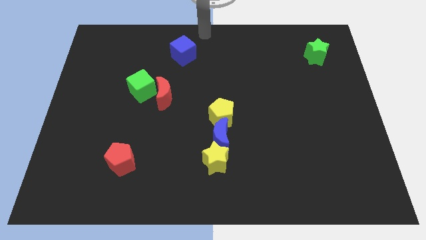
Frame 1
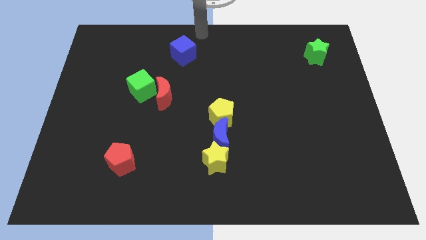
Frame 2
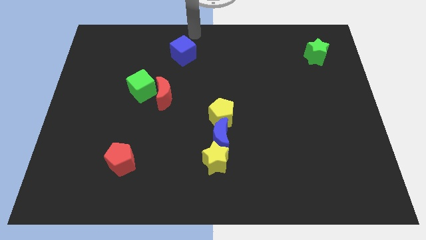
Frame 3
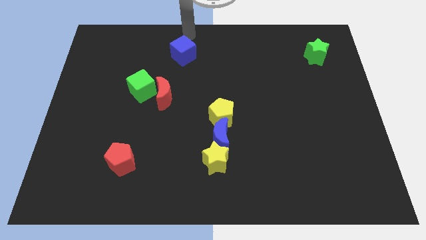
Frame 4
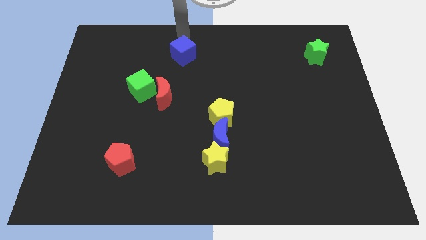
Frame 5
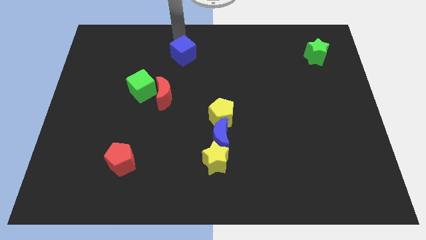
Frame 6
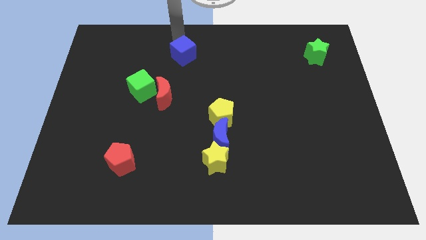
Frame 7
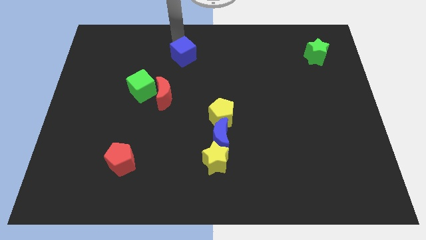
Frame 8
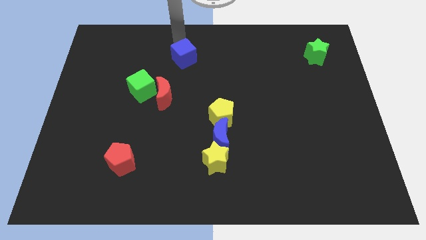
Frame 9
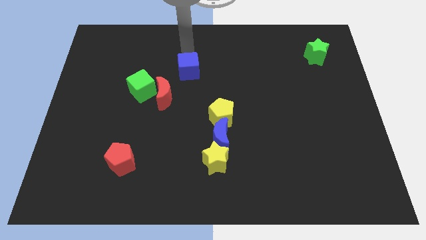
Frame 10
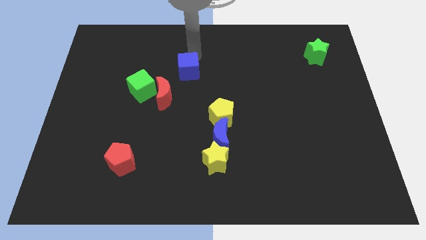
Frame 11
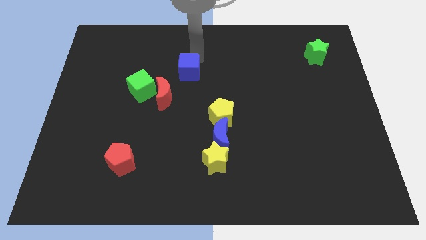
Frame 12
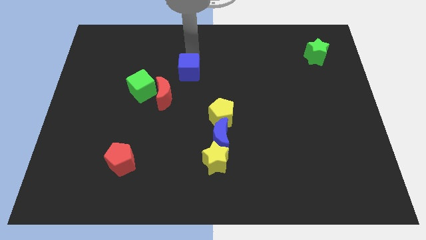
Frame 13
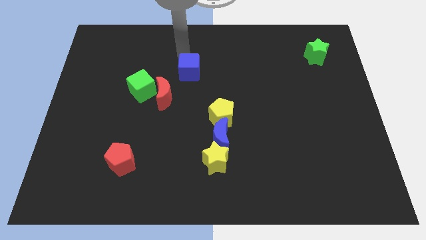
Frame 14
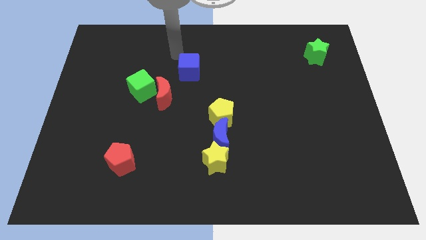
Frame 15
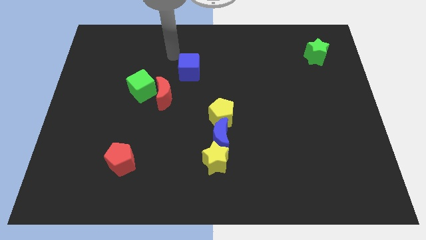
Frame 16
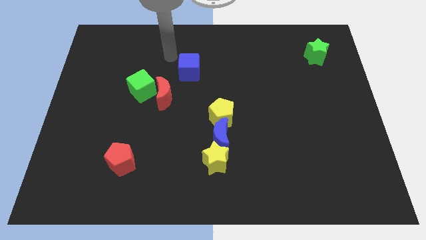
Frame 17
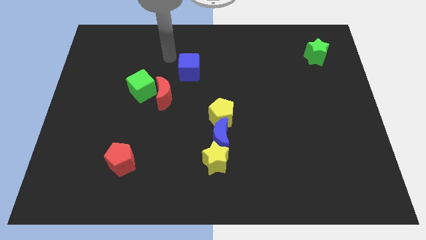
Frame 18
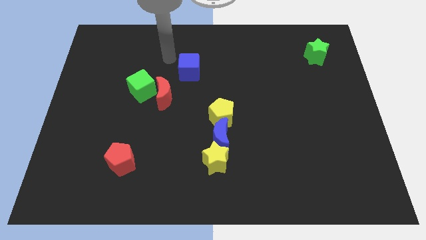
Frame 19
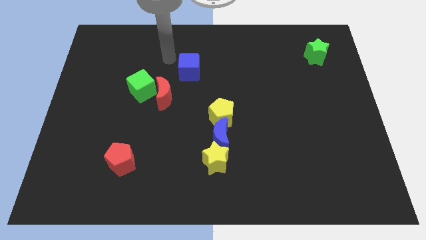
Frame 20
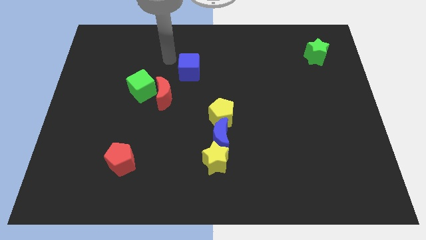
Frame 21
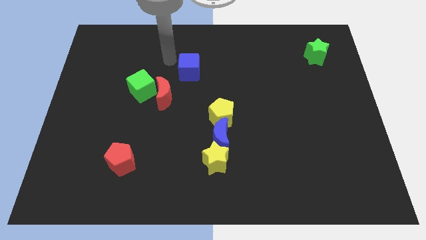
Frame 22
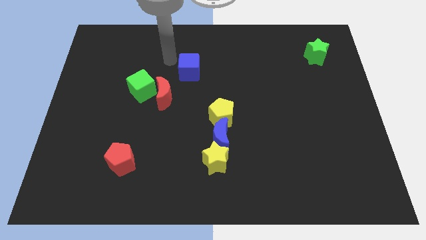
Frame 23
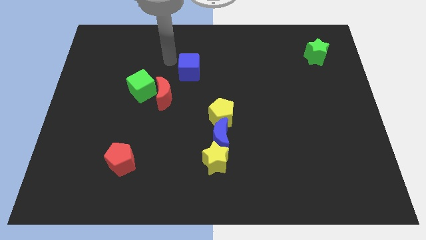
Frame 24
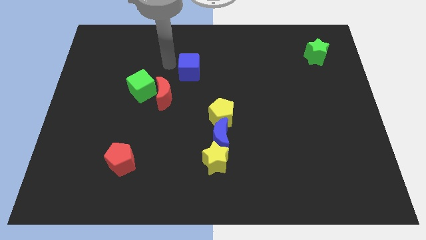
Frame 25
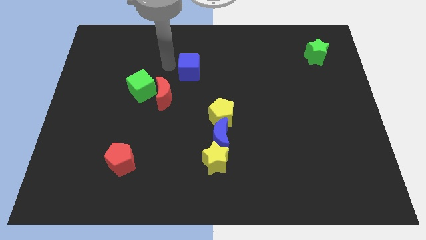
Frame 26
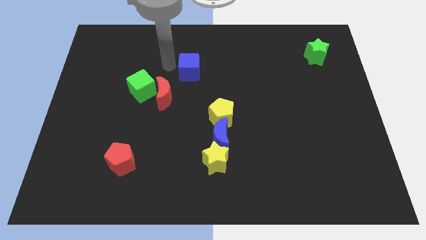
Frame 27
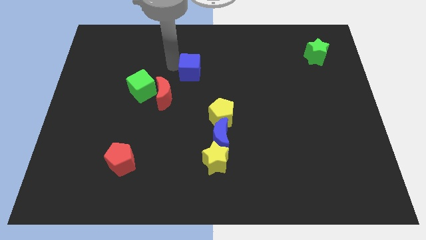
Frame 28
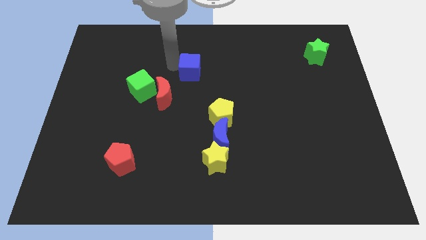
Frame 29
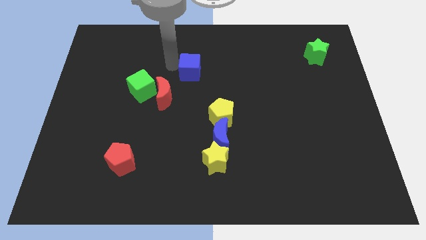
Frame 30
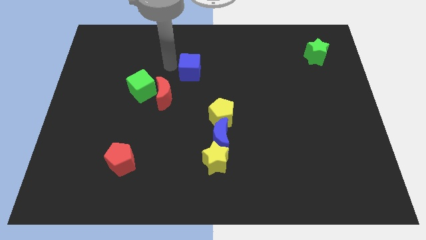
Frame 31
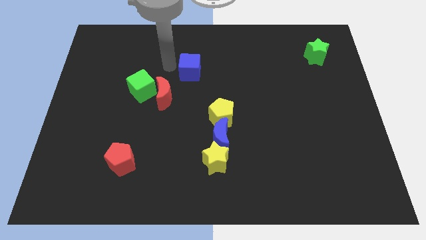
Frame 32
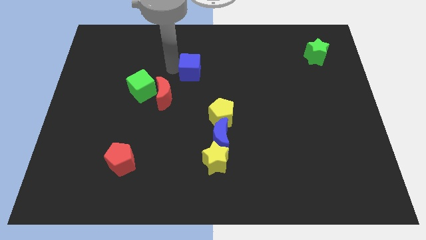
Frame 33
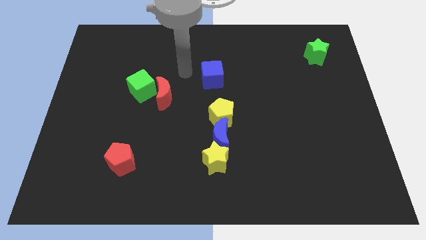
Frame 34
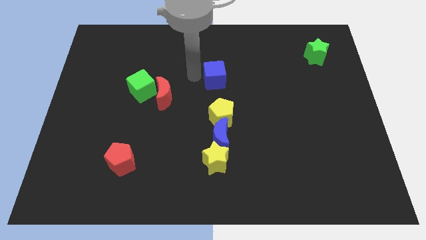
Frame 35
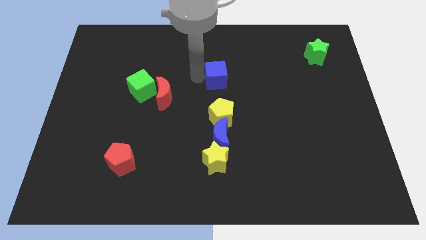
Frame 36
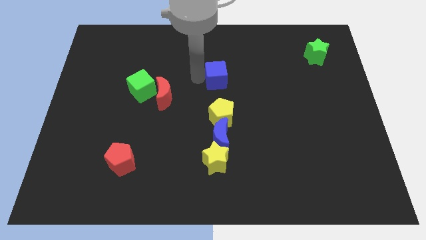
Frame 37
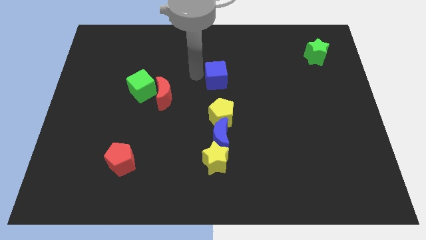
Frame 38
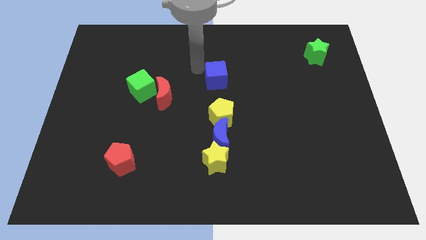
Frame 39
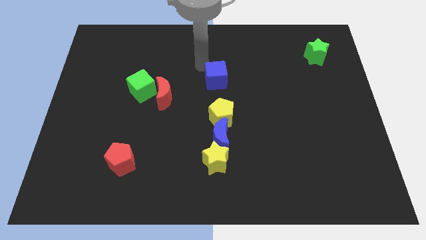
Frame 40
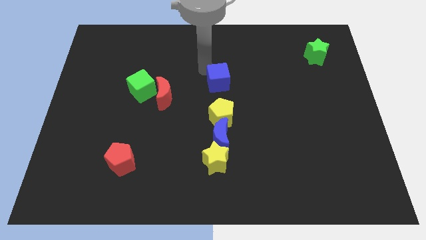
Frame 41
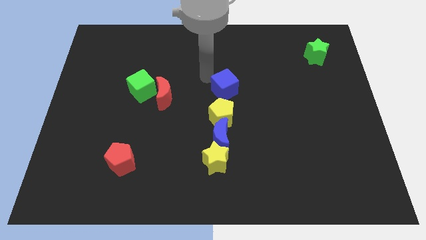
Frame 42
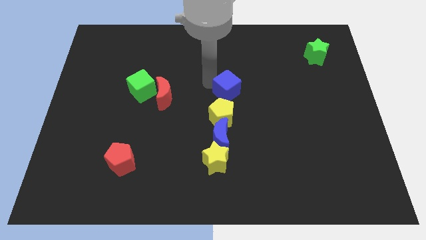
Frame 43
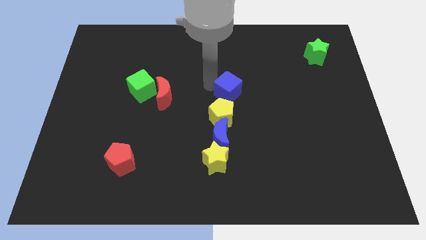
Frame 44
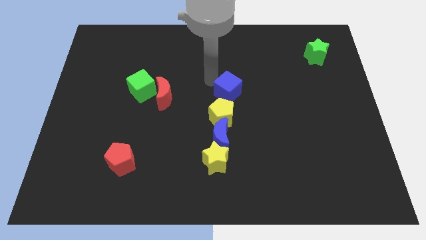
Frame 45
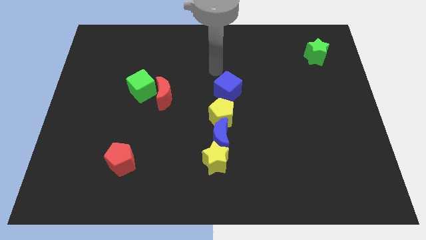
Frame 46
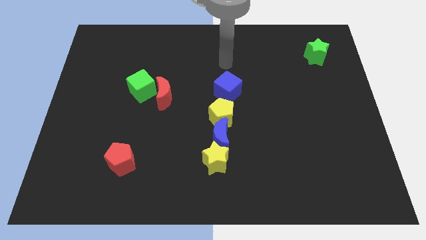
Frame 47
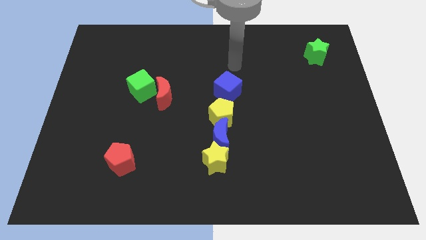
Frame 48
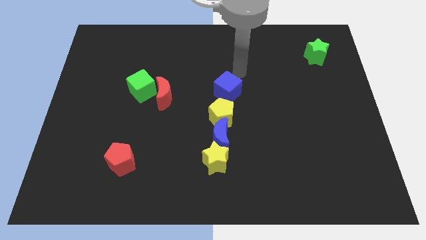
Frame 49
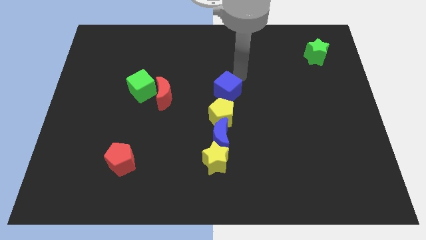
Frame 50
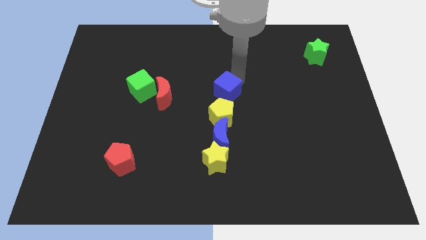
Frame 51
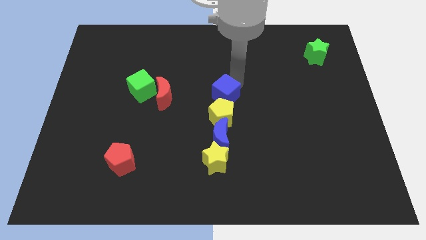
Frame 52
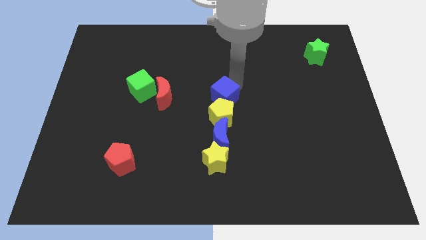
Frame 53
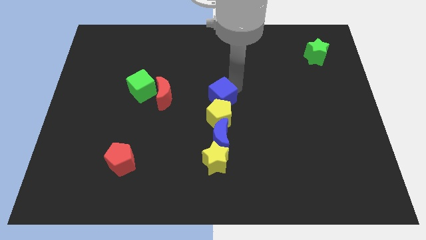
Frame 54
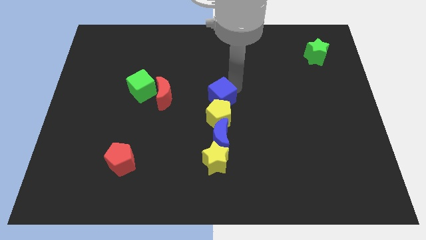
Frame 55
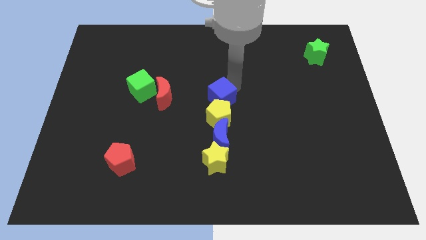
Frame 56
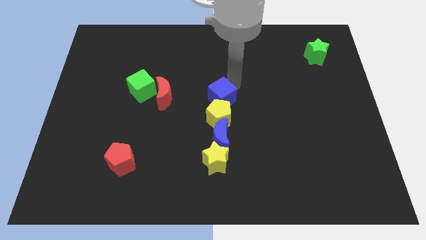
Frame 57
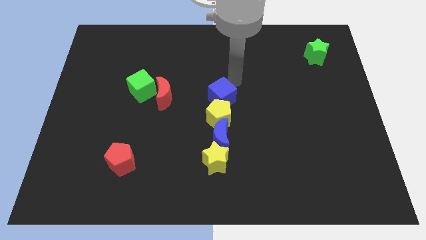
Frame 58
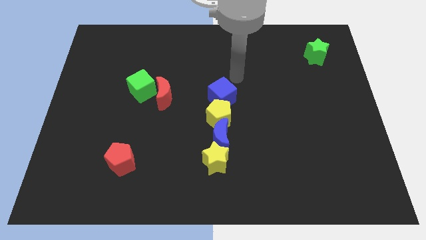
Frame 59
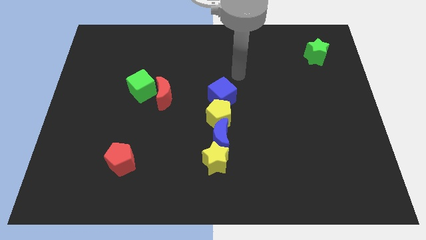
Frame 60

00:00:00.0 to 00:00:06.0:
push the blue cube to the top side of the yellow pentagon

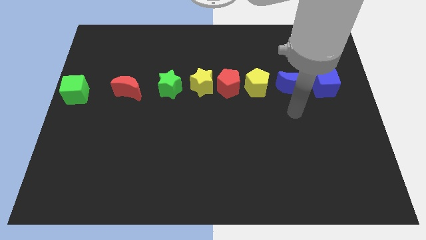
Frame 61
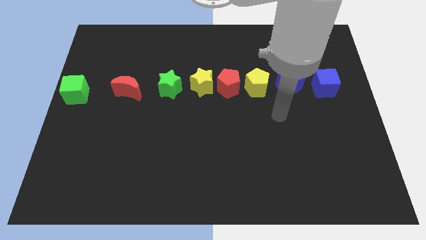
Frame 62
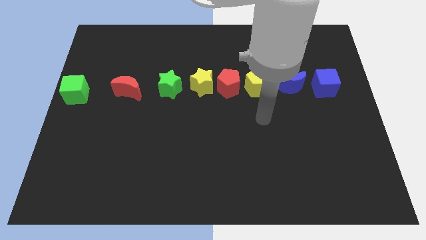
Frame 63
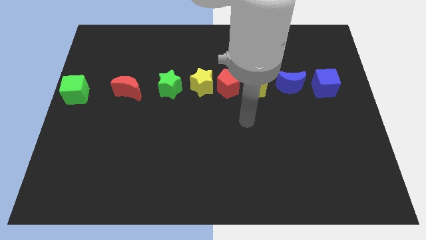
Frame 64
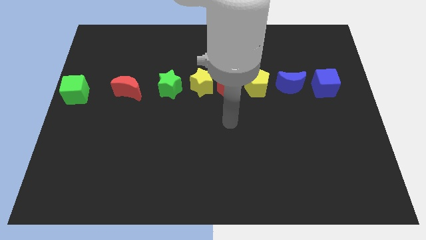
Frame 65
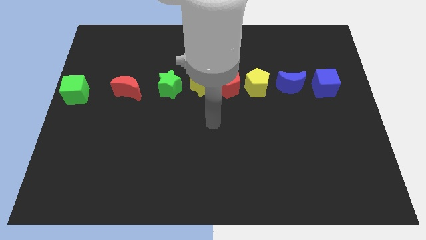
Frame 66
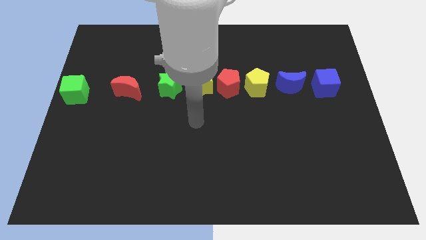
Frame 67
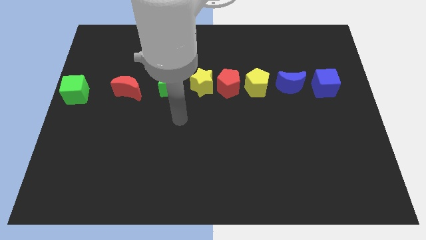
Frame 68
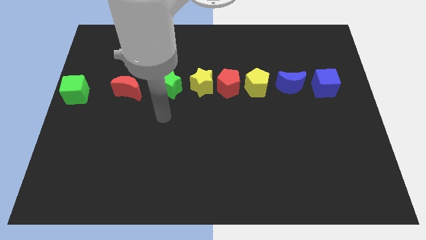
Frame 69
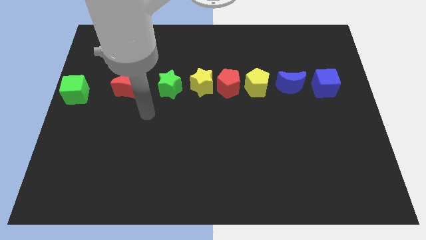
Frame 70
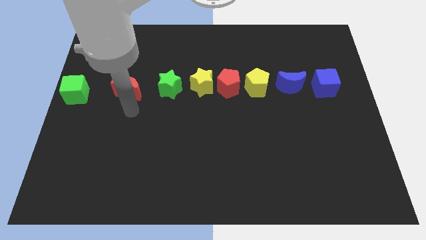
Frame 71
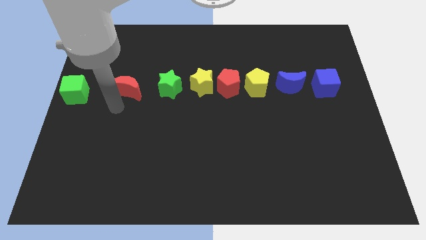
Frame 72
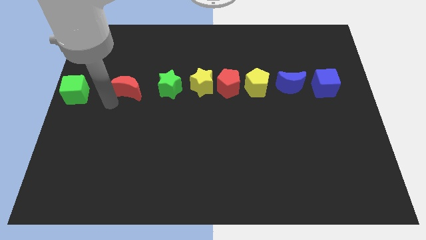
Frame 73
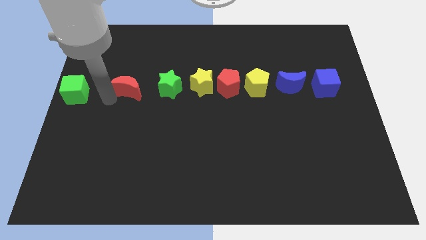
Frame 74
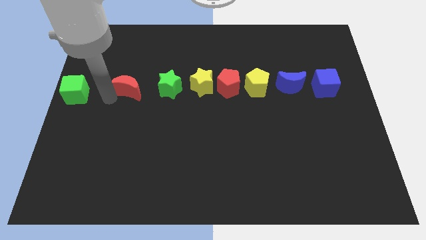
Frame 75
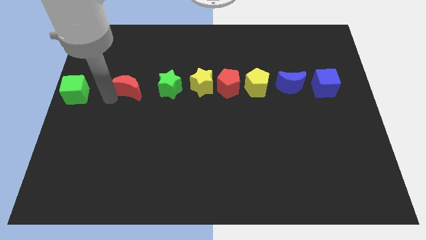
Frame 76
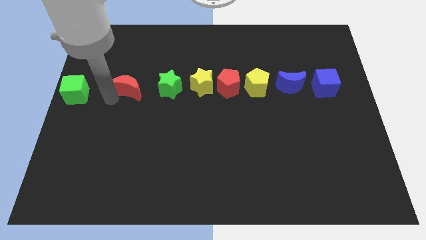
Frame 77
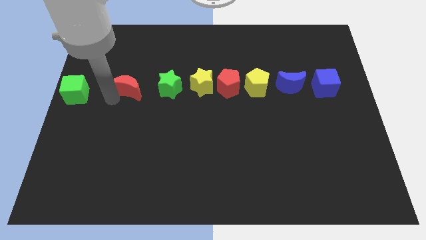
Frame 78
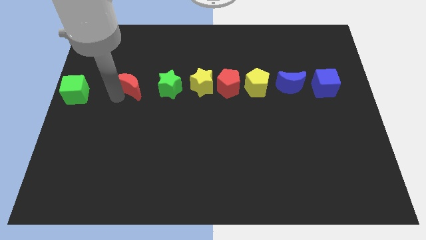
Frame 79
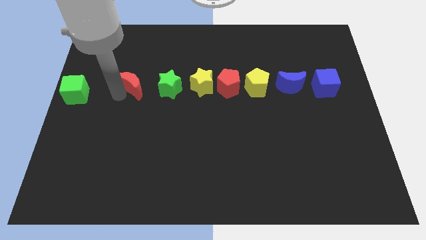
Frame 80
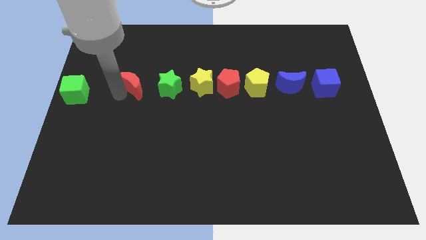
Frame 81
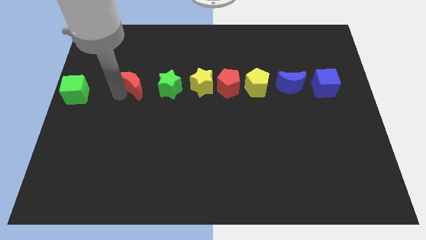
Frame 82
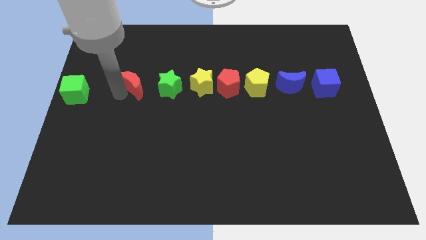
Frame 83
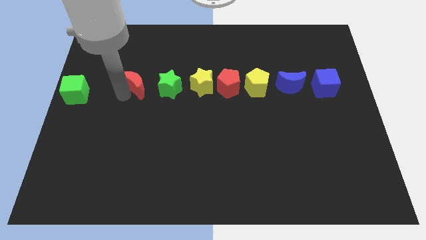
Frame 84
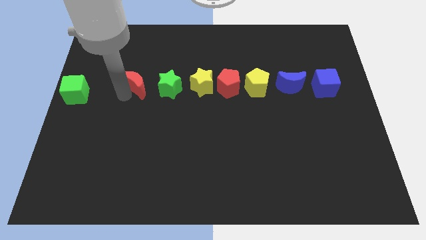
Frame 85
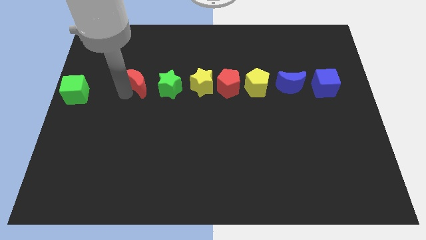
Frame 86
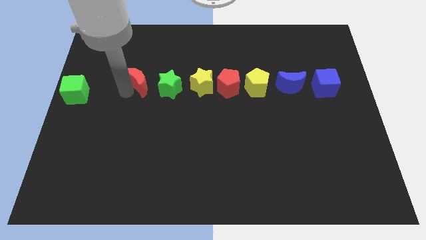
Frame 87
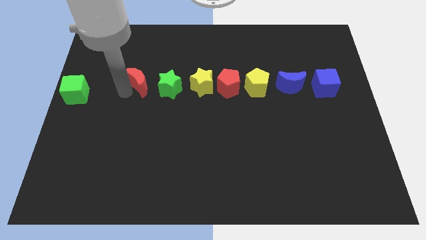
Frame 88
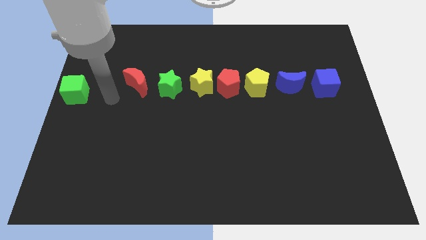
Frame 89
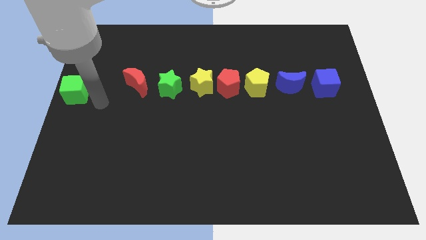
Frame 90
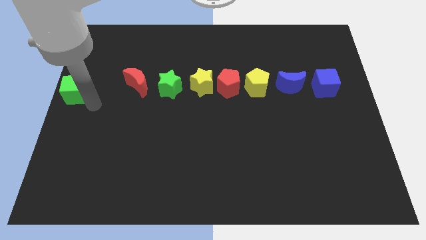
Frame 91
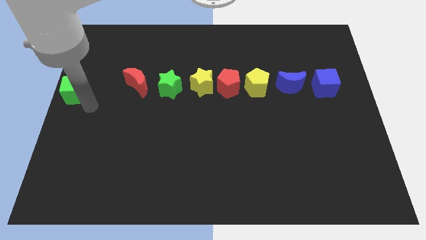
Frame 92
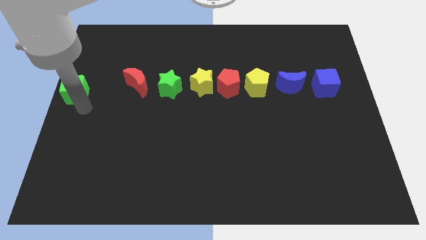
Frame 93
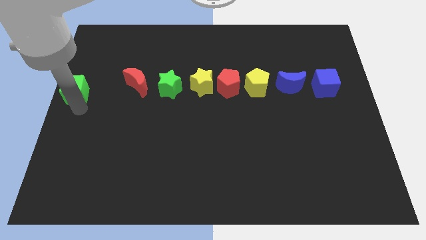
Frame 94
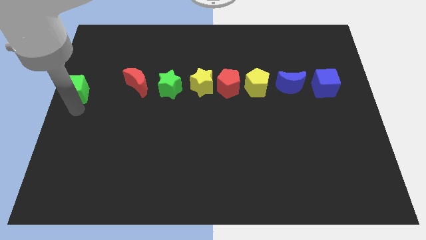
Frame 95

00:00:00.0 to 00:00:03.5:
push the red crescent to the left of the green star
